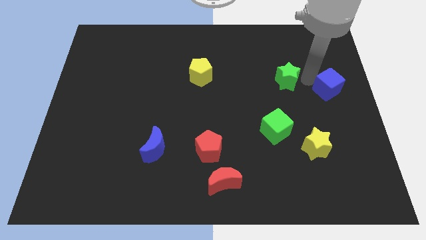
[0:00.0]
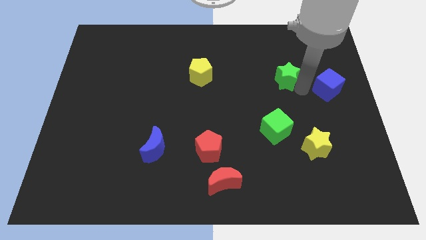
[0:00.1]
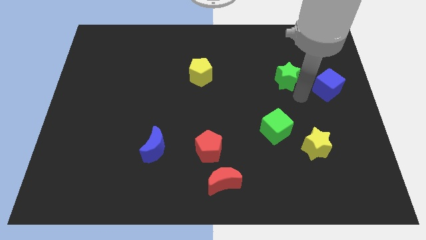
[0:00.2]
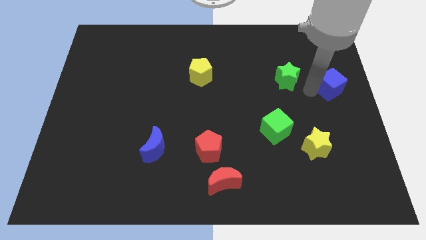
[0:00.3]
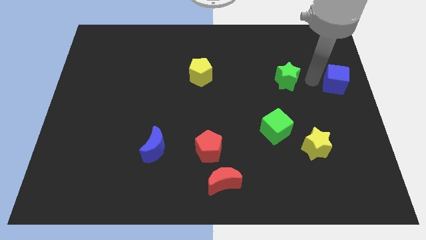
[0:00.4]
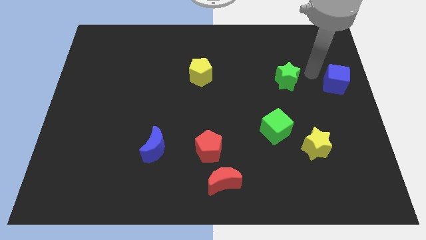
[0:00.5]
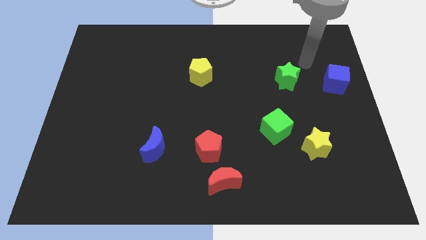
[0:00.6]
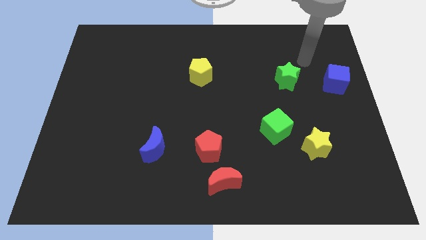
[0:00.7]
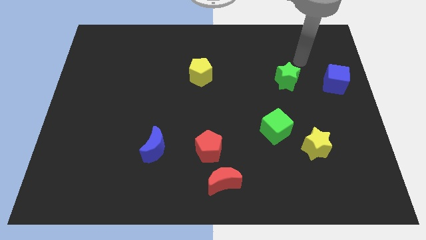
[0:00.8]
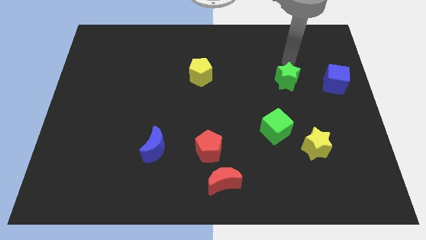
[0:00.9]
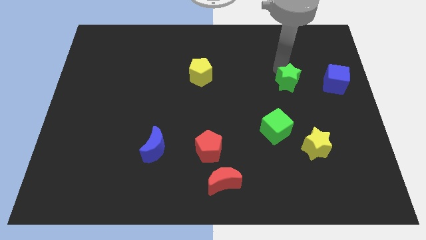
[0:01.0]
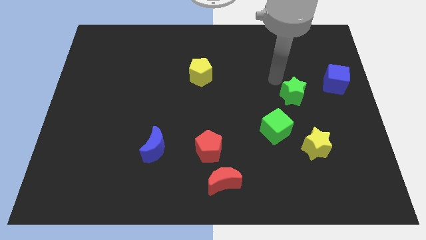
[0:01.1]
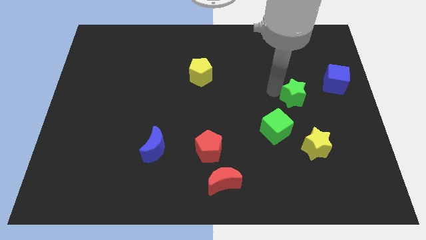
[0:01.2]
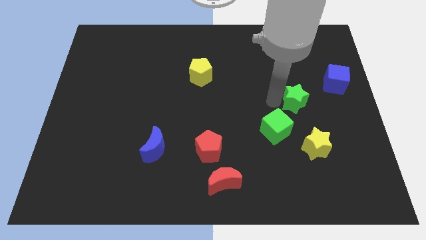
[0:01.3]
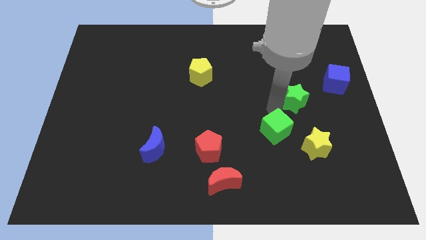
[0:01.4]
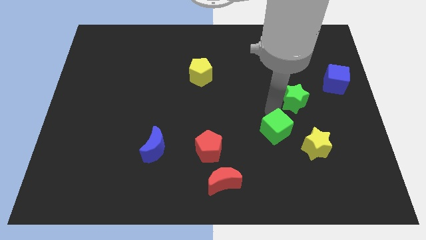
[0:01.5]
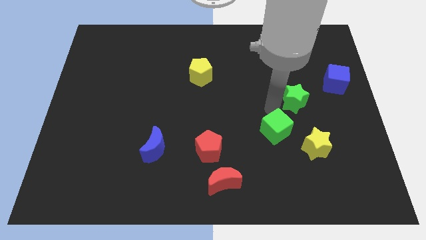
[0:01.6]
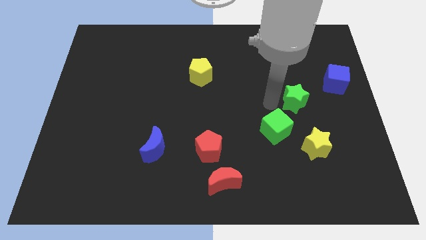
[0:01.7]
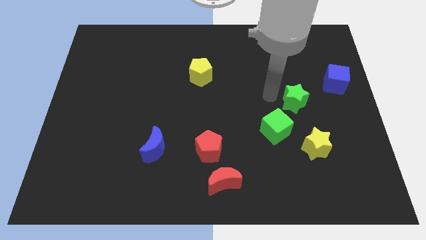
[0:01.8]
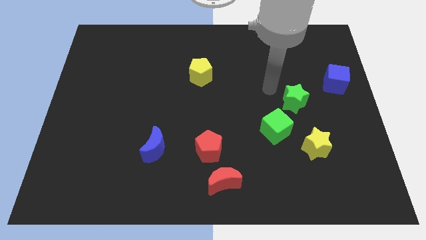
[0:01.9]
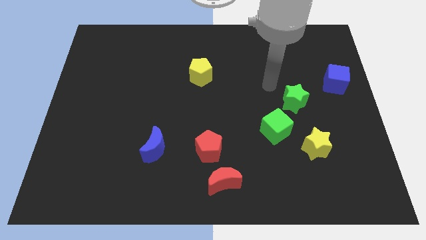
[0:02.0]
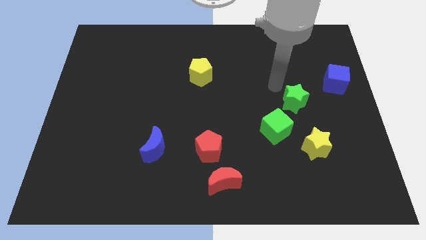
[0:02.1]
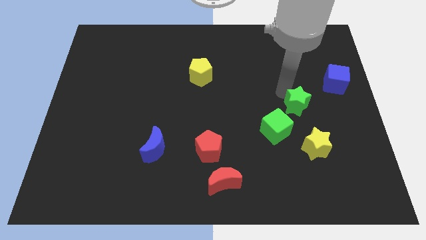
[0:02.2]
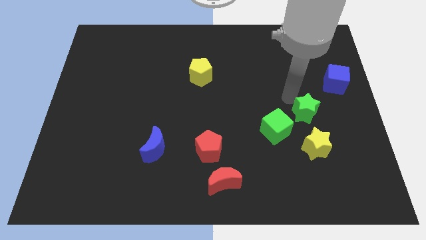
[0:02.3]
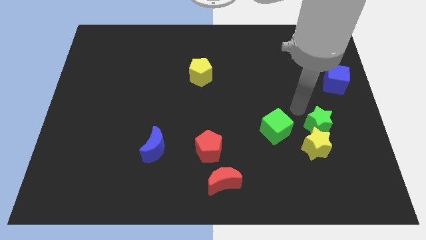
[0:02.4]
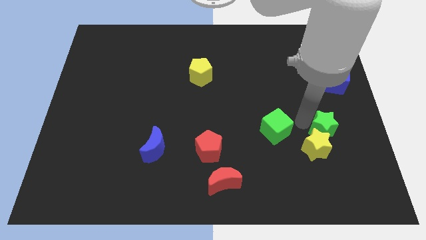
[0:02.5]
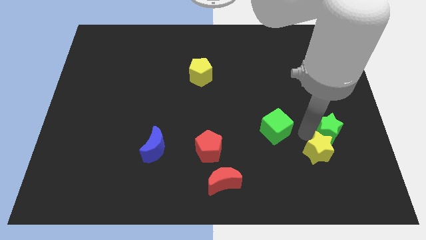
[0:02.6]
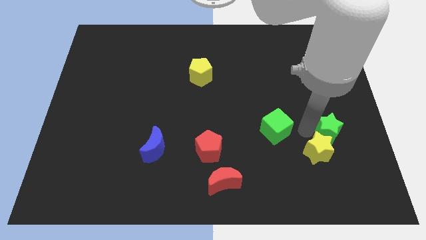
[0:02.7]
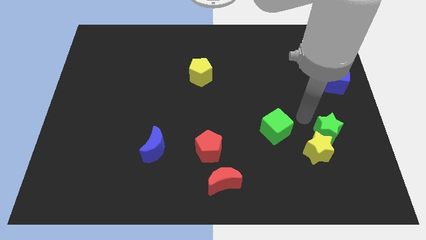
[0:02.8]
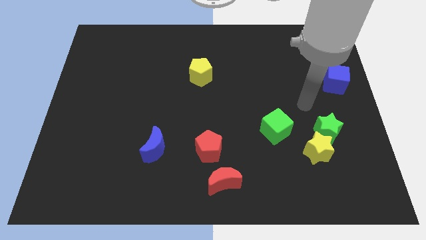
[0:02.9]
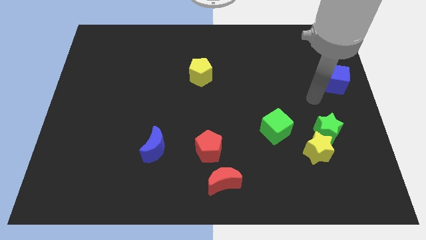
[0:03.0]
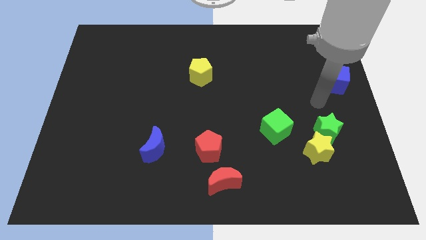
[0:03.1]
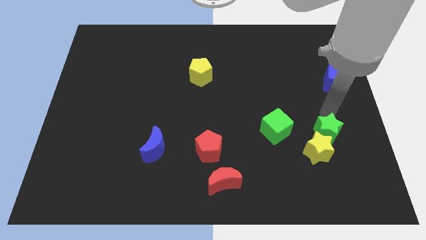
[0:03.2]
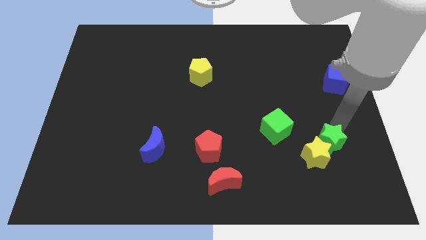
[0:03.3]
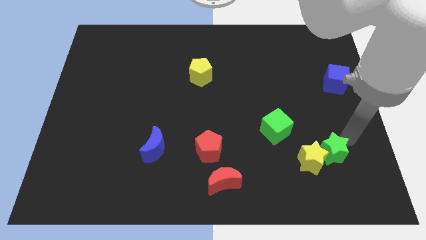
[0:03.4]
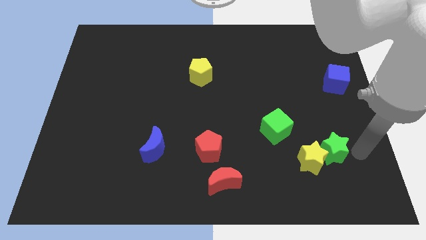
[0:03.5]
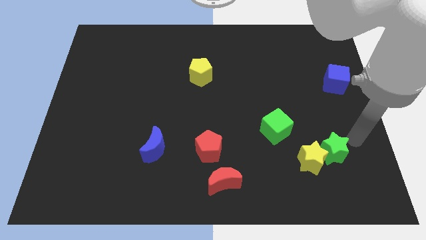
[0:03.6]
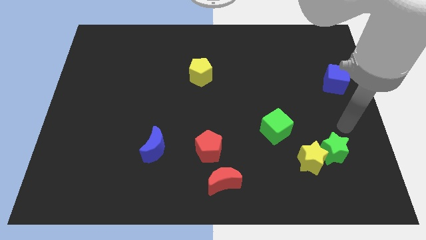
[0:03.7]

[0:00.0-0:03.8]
attach the green star to the yellow star

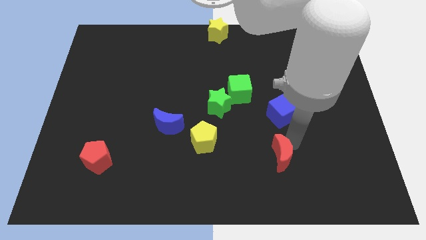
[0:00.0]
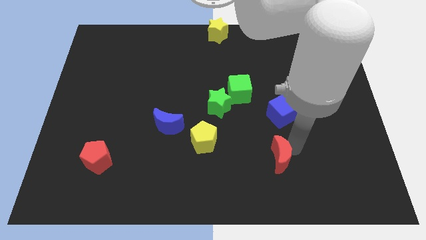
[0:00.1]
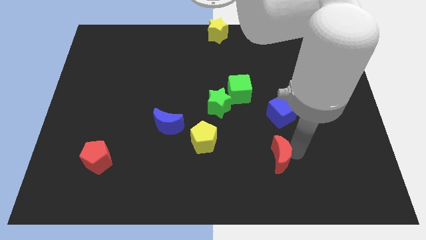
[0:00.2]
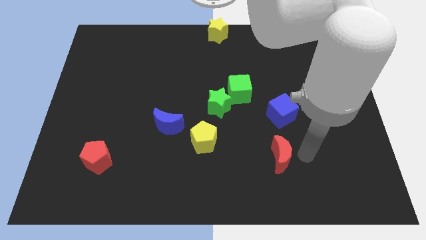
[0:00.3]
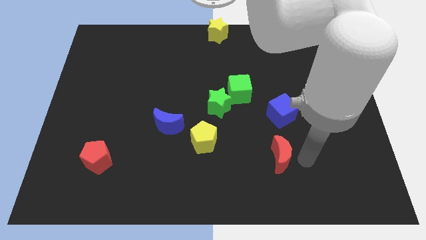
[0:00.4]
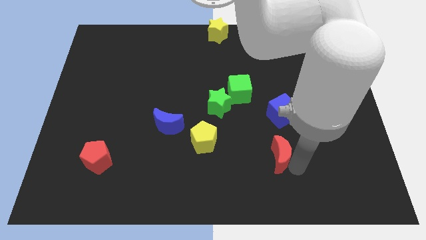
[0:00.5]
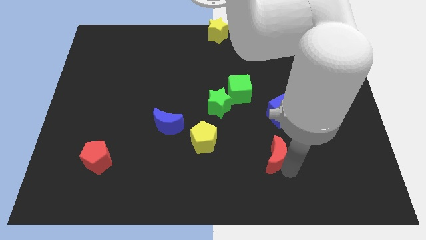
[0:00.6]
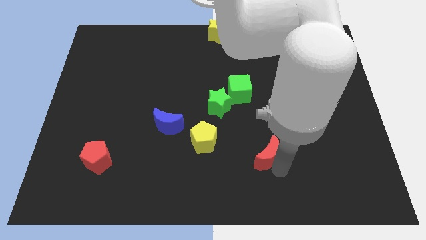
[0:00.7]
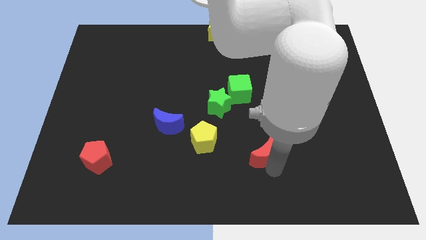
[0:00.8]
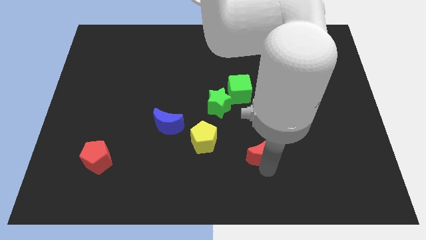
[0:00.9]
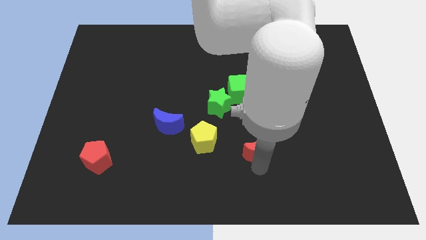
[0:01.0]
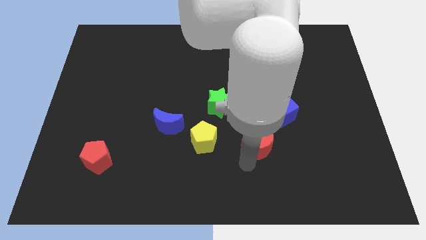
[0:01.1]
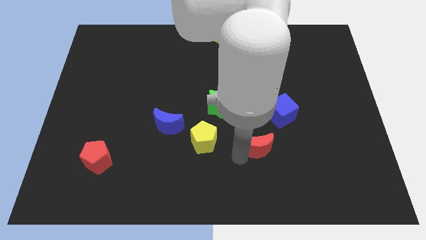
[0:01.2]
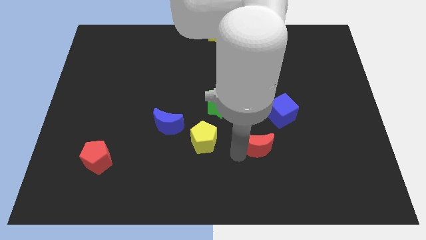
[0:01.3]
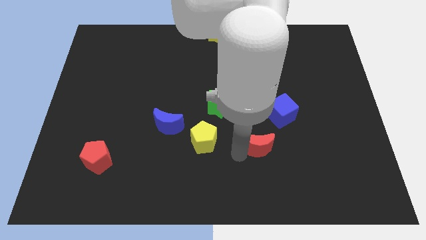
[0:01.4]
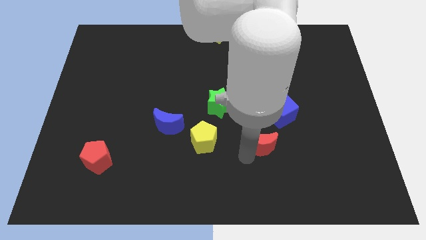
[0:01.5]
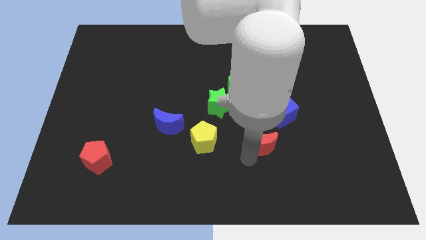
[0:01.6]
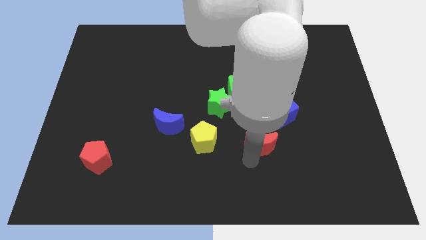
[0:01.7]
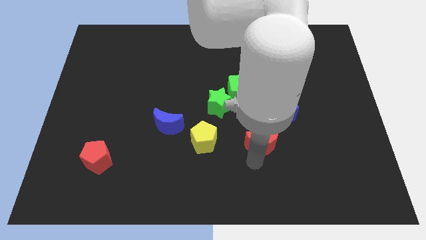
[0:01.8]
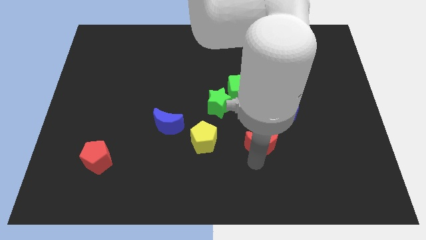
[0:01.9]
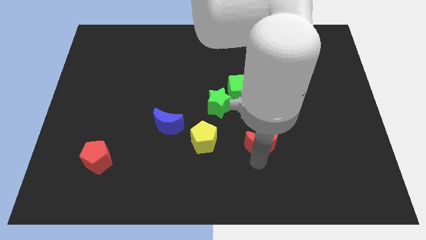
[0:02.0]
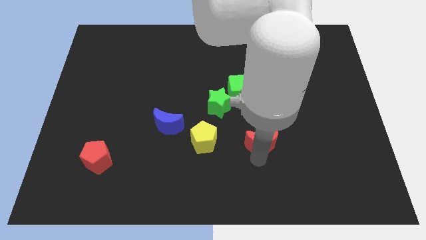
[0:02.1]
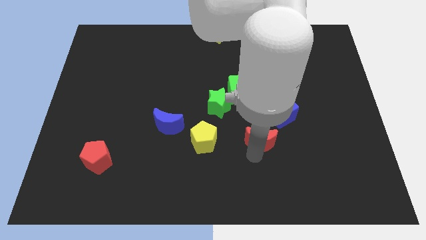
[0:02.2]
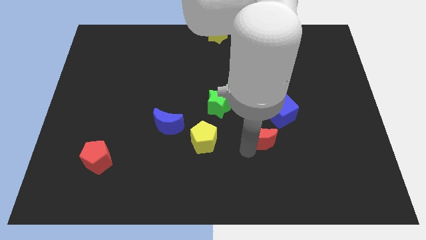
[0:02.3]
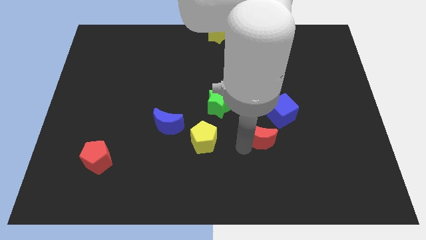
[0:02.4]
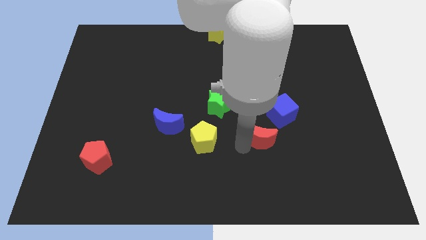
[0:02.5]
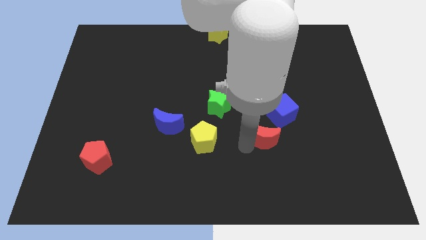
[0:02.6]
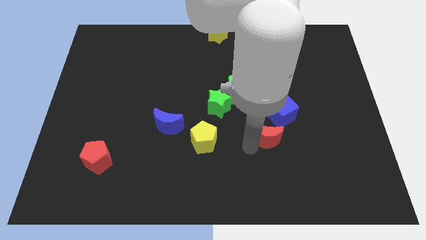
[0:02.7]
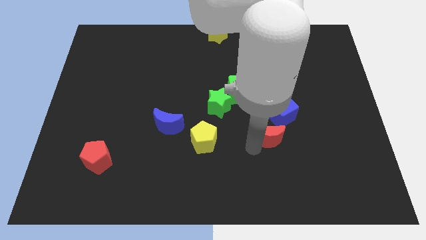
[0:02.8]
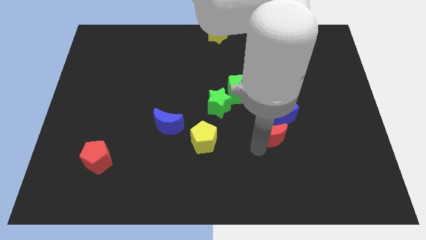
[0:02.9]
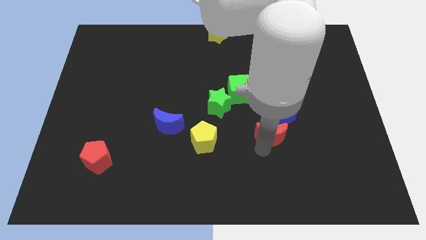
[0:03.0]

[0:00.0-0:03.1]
place red crescent down to the blue cube

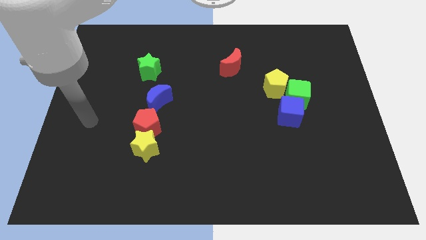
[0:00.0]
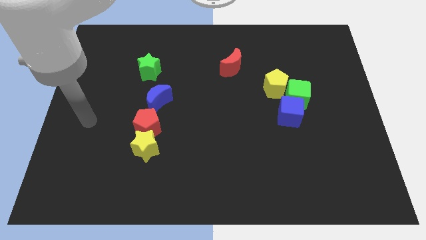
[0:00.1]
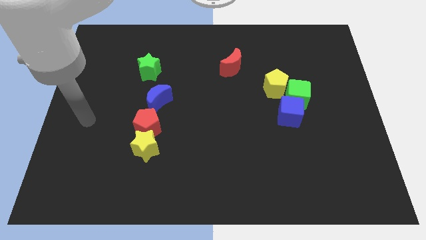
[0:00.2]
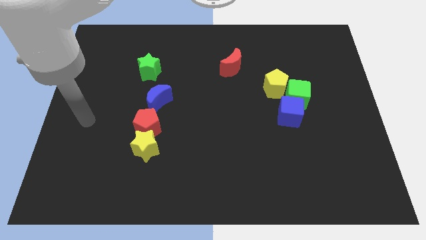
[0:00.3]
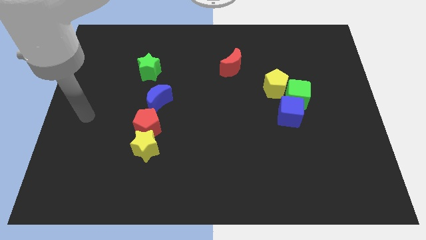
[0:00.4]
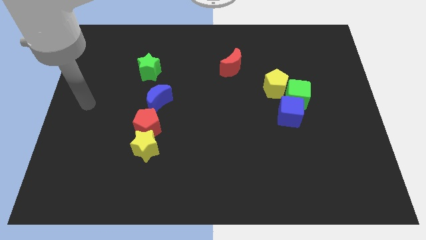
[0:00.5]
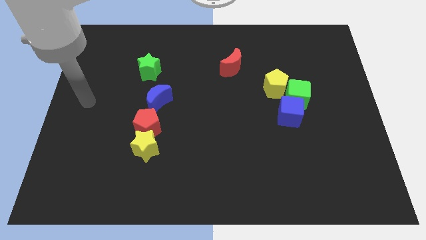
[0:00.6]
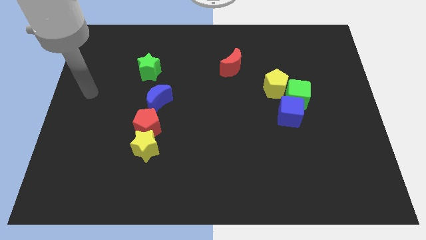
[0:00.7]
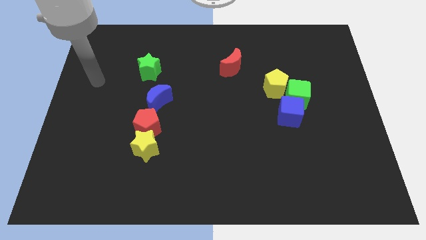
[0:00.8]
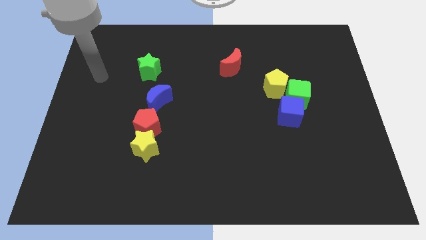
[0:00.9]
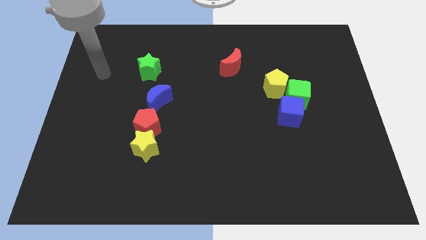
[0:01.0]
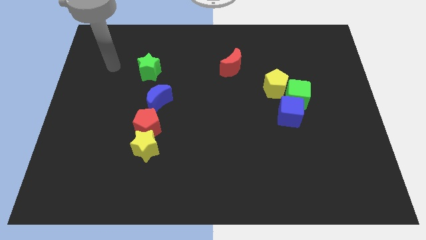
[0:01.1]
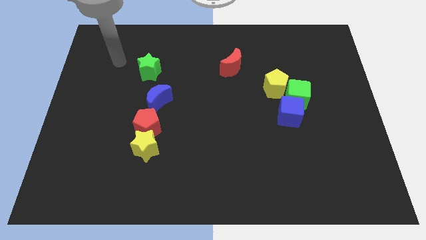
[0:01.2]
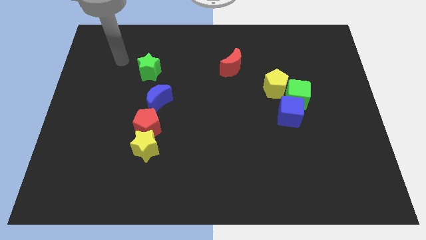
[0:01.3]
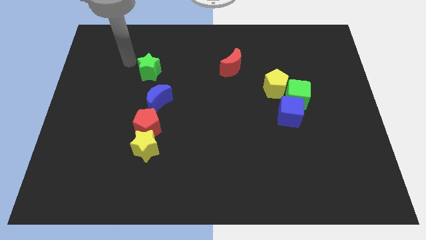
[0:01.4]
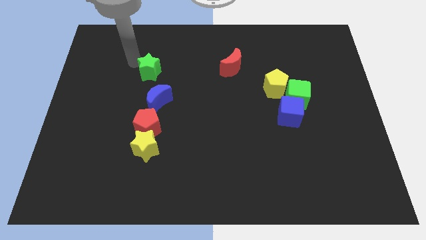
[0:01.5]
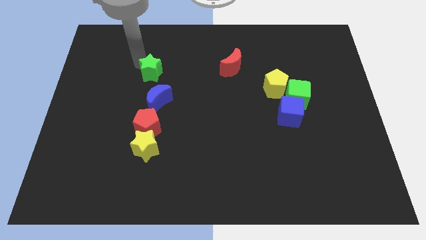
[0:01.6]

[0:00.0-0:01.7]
point your arm left to green star

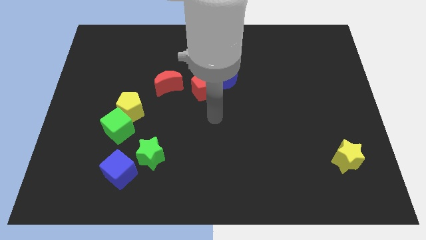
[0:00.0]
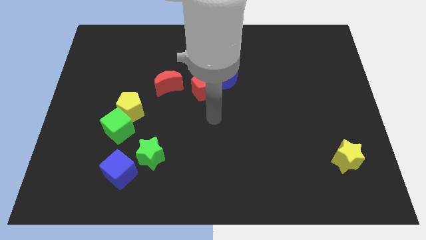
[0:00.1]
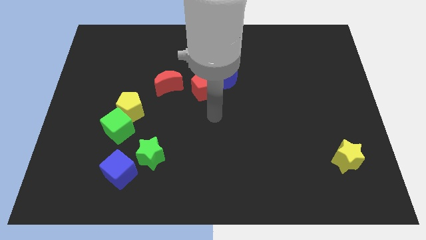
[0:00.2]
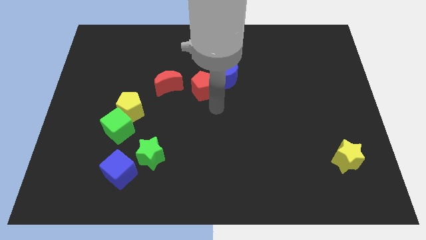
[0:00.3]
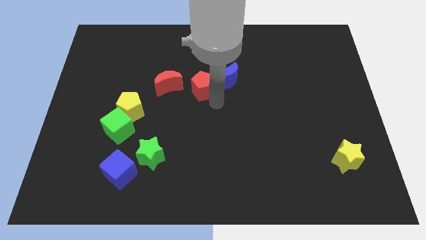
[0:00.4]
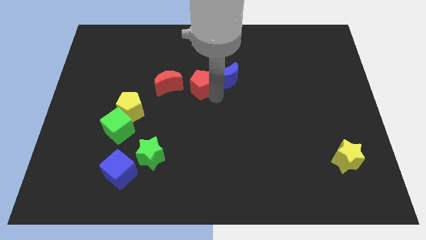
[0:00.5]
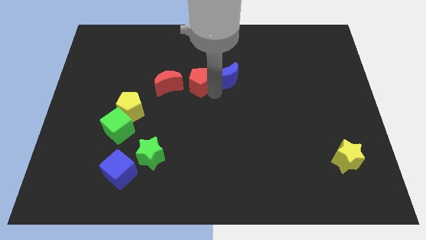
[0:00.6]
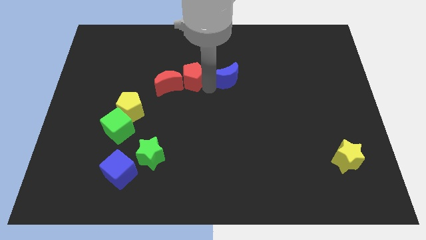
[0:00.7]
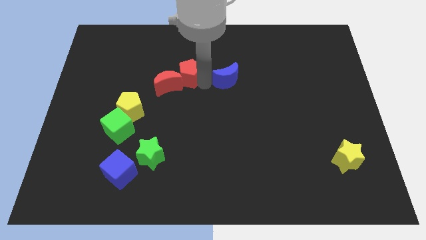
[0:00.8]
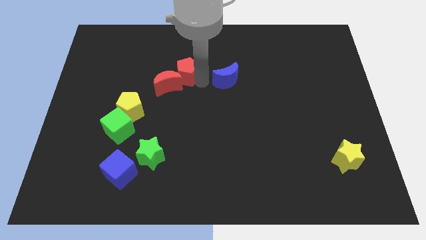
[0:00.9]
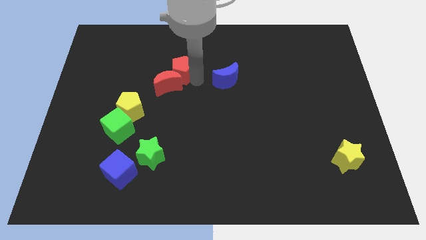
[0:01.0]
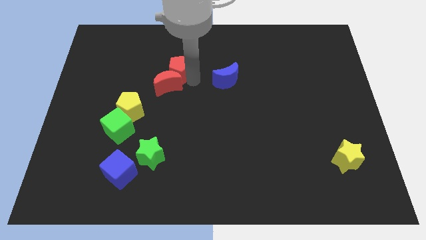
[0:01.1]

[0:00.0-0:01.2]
move the red pentagon above the red crescent
